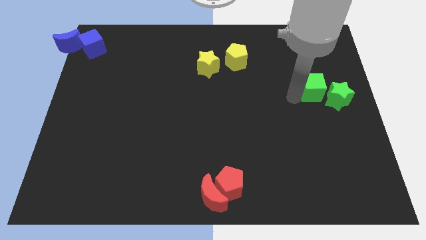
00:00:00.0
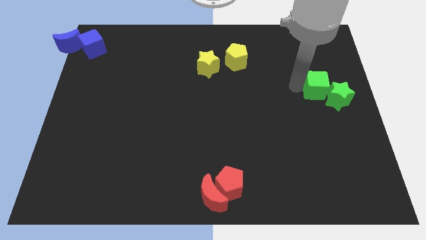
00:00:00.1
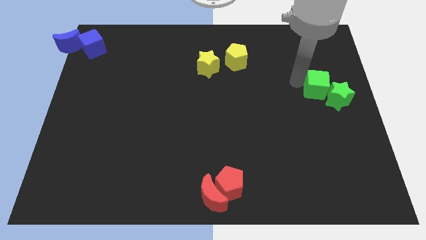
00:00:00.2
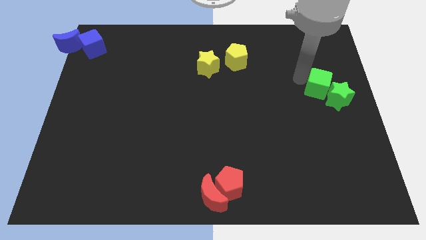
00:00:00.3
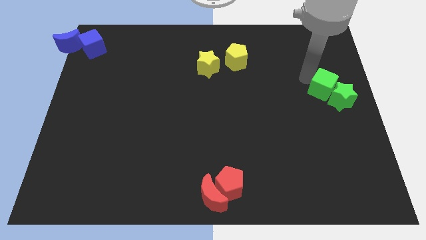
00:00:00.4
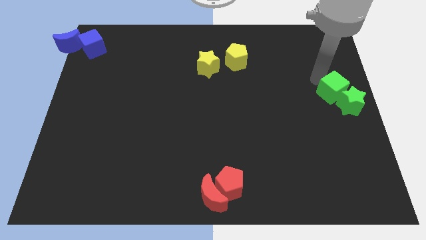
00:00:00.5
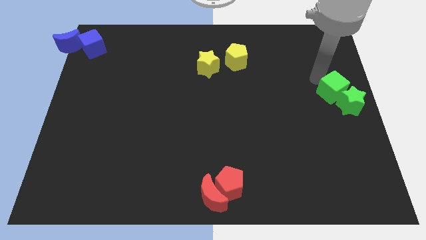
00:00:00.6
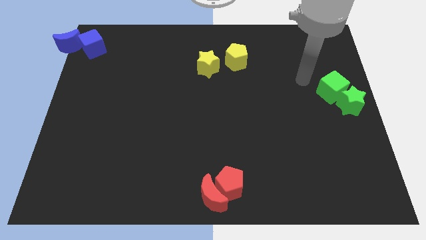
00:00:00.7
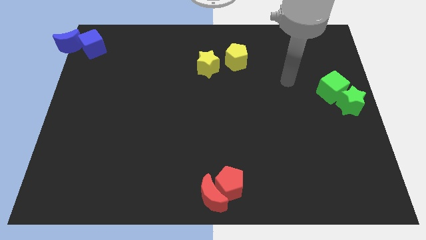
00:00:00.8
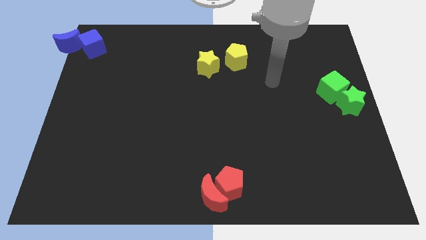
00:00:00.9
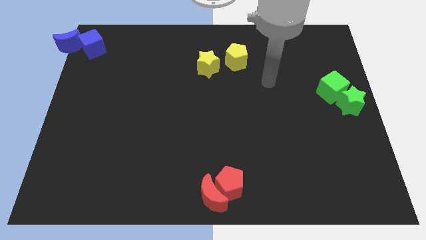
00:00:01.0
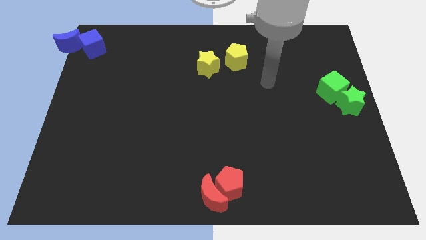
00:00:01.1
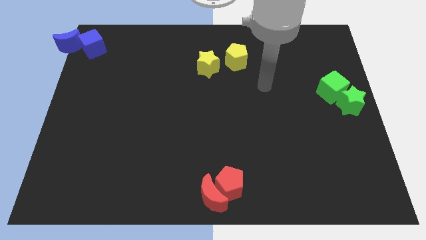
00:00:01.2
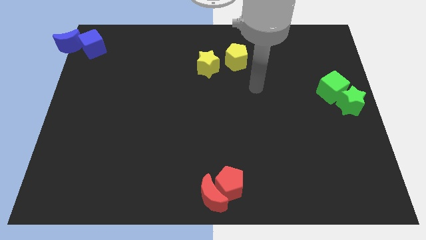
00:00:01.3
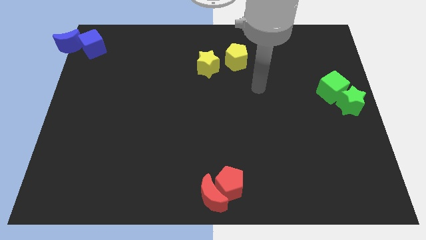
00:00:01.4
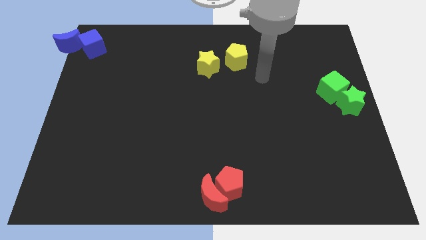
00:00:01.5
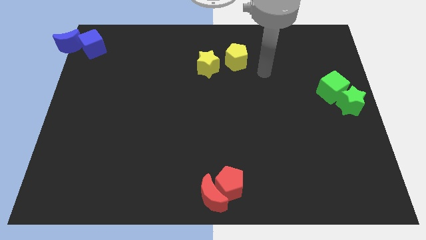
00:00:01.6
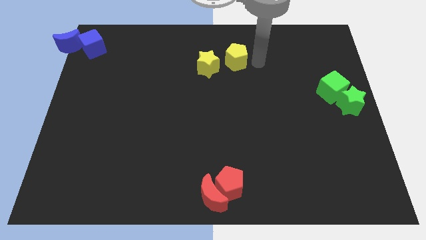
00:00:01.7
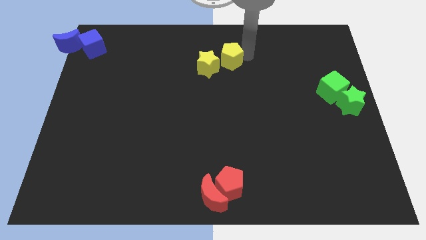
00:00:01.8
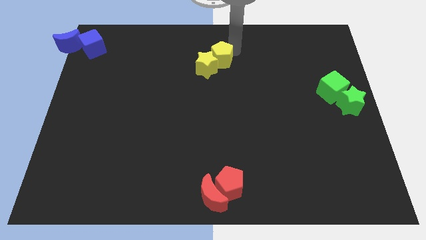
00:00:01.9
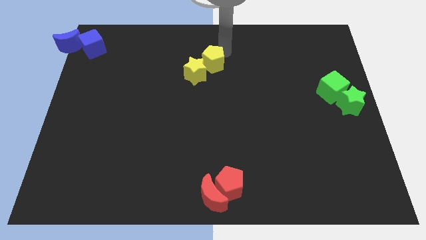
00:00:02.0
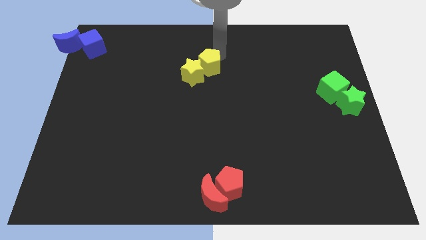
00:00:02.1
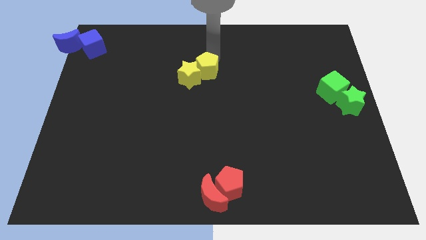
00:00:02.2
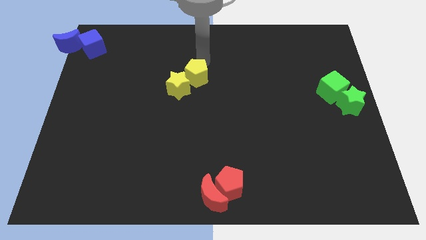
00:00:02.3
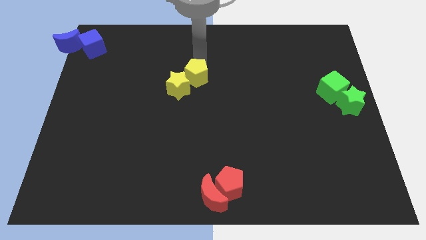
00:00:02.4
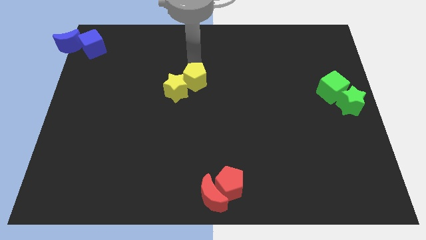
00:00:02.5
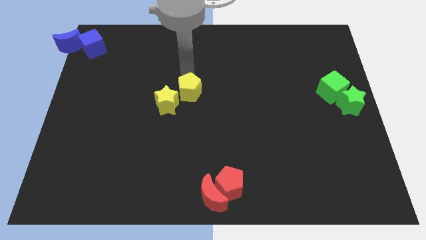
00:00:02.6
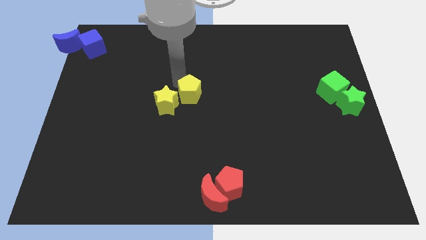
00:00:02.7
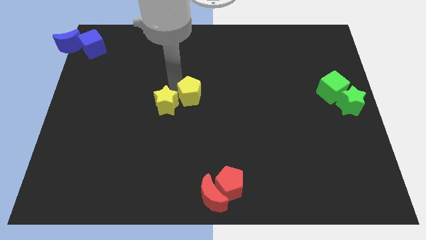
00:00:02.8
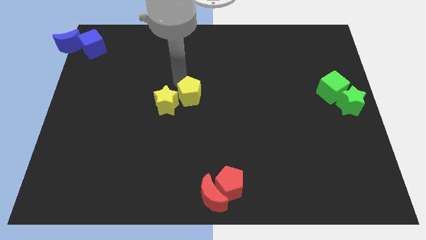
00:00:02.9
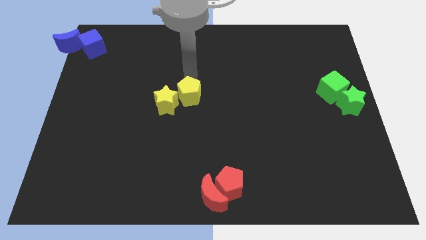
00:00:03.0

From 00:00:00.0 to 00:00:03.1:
push the group of yellow blocks downwards

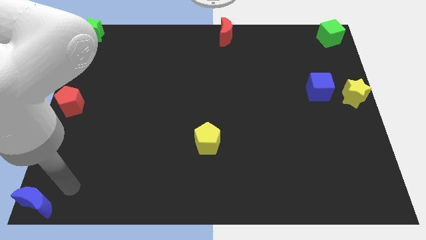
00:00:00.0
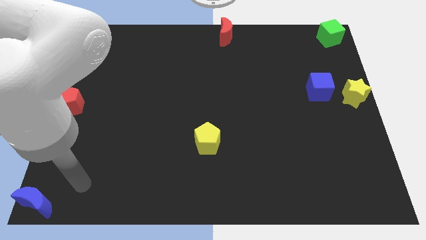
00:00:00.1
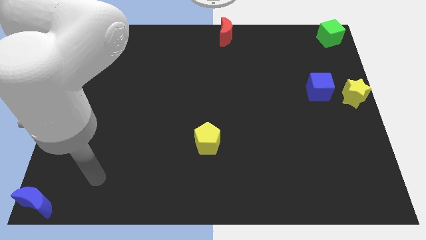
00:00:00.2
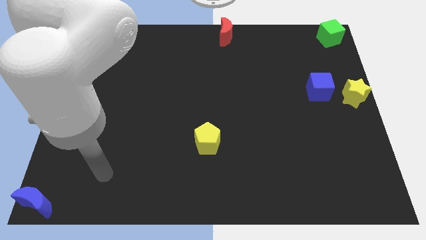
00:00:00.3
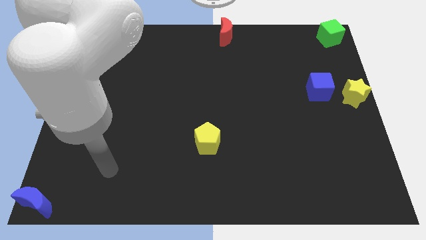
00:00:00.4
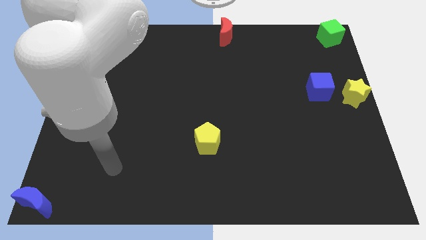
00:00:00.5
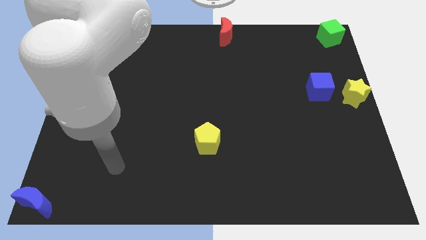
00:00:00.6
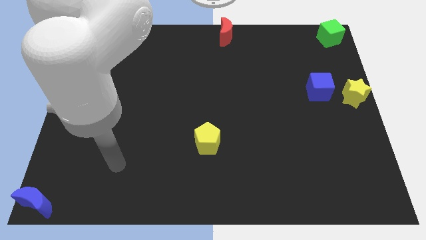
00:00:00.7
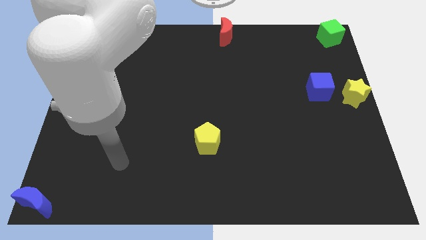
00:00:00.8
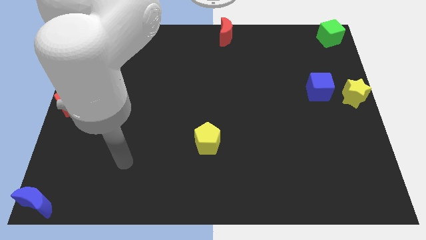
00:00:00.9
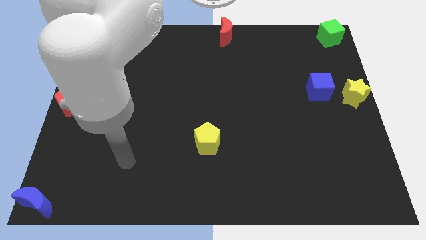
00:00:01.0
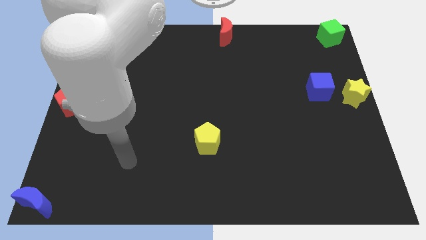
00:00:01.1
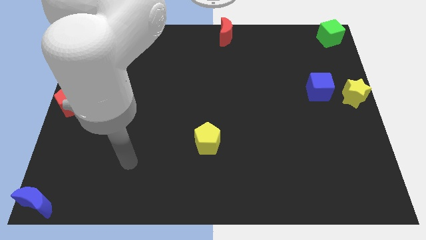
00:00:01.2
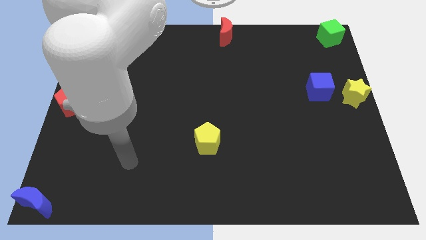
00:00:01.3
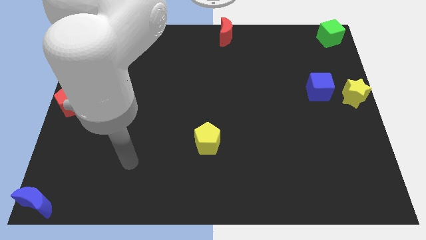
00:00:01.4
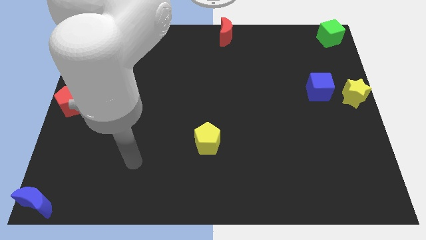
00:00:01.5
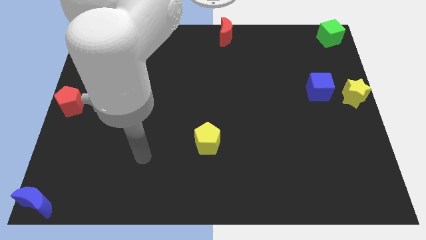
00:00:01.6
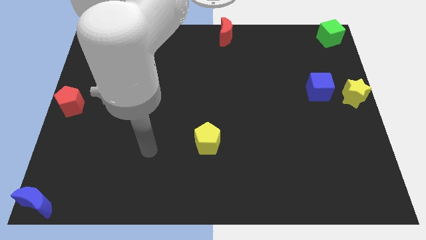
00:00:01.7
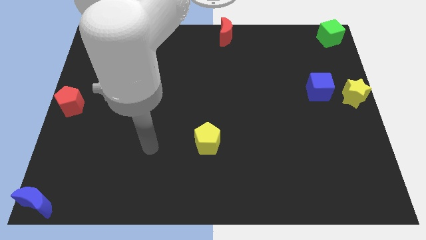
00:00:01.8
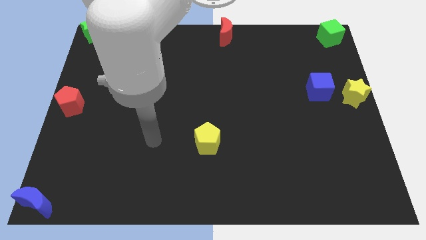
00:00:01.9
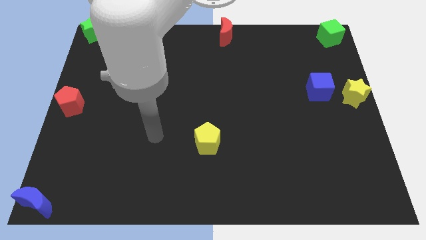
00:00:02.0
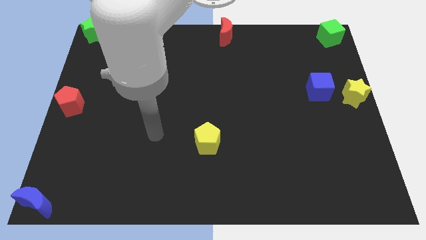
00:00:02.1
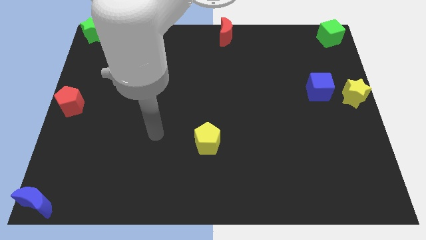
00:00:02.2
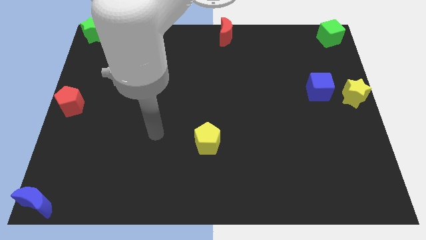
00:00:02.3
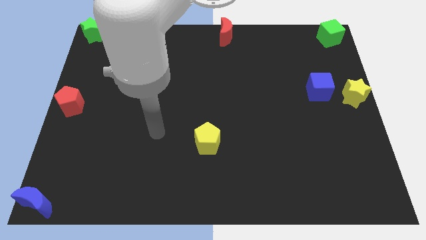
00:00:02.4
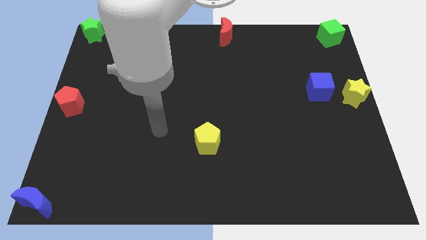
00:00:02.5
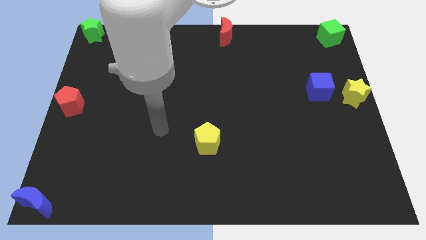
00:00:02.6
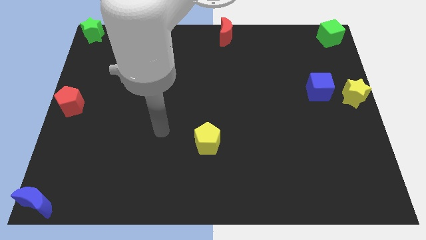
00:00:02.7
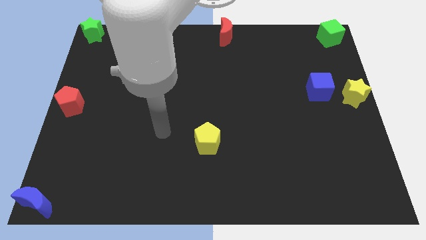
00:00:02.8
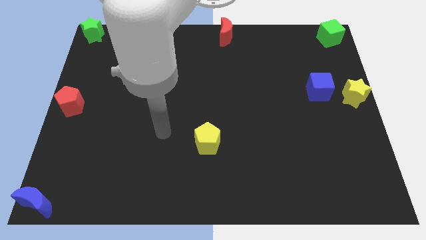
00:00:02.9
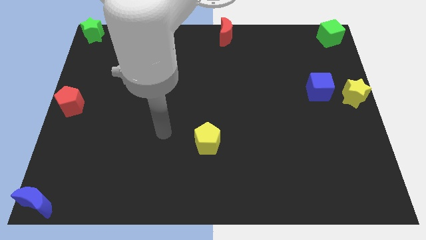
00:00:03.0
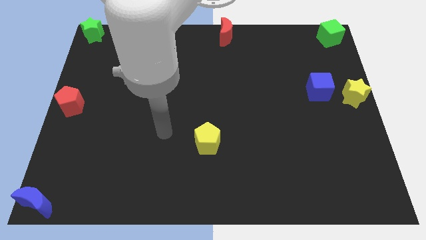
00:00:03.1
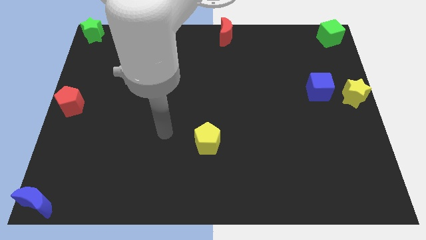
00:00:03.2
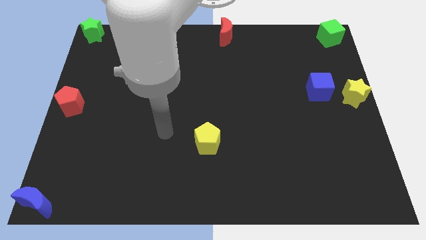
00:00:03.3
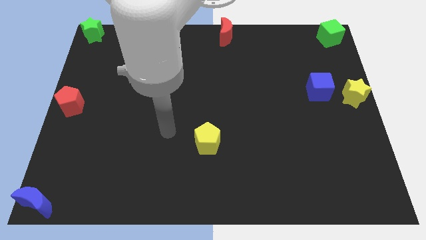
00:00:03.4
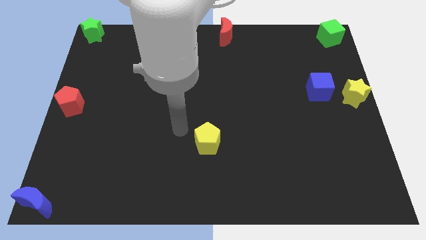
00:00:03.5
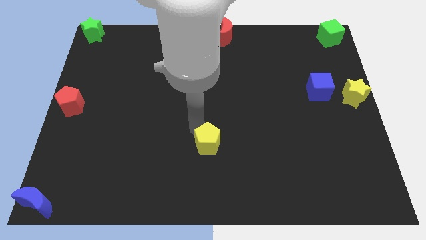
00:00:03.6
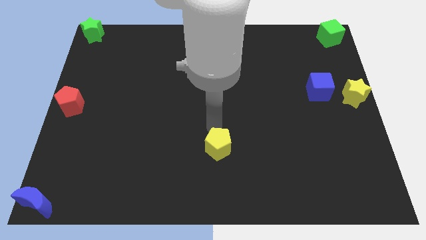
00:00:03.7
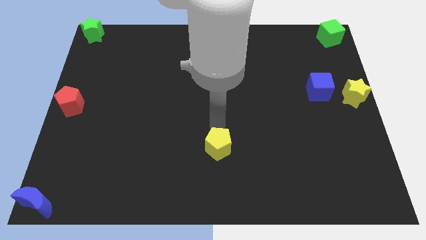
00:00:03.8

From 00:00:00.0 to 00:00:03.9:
move your arm to the top of the yellow pentagon

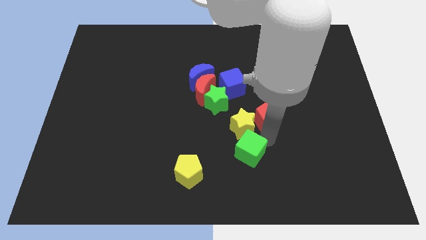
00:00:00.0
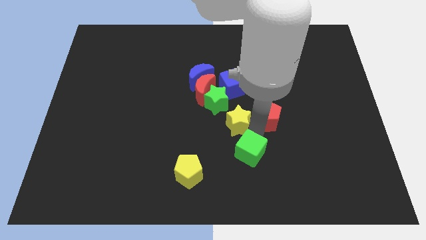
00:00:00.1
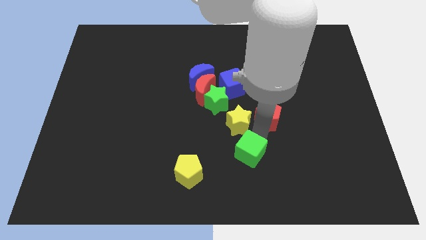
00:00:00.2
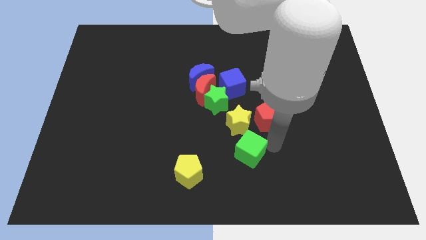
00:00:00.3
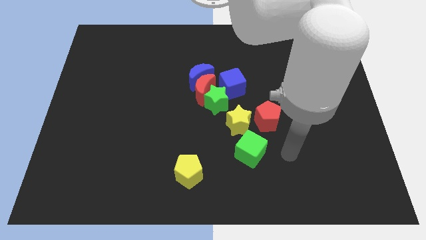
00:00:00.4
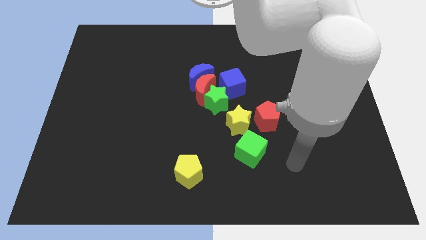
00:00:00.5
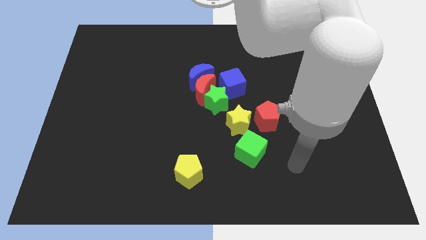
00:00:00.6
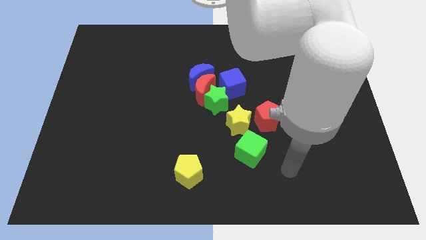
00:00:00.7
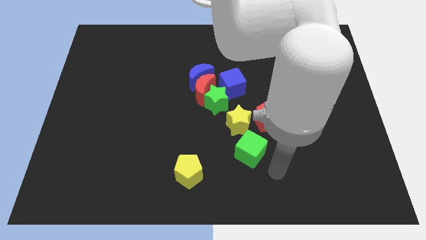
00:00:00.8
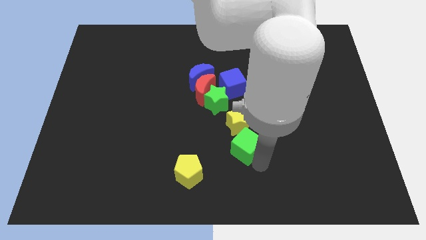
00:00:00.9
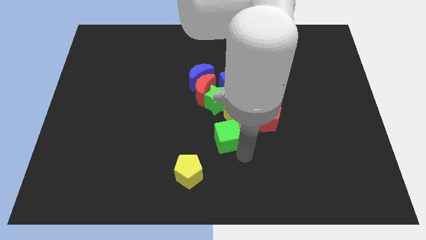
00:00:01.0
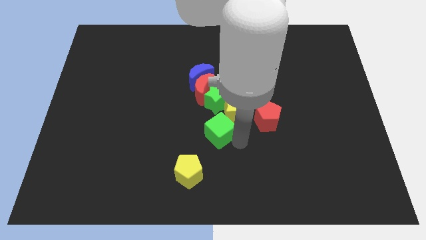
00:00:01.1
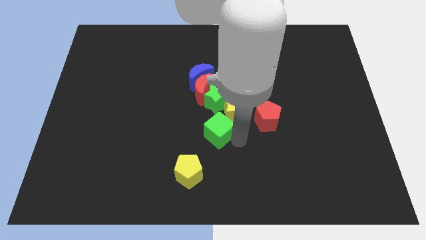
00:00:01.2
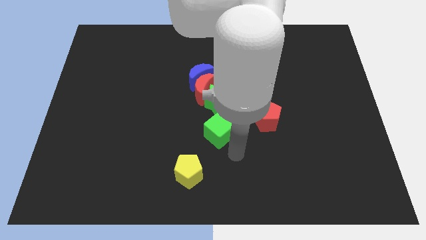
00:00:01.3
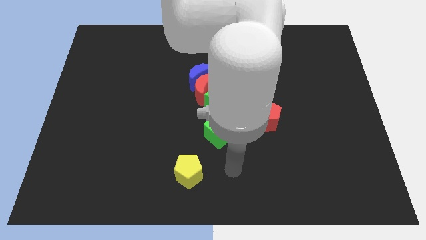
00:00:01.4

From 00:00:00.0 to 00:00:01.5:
push green cube into group of blocks

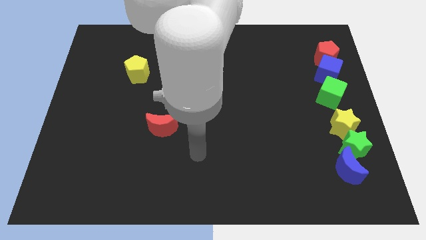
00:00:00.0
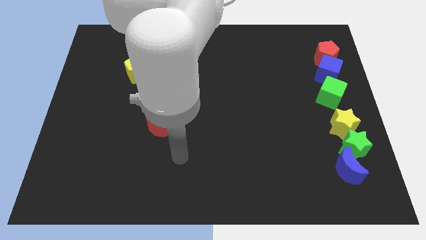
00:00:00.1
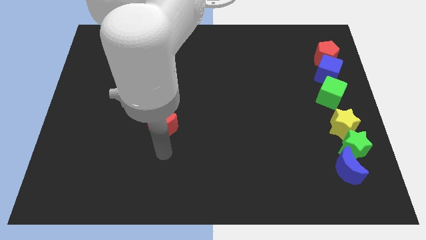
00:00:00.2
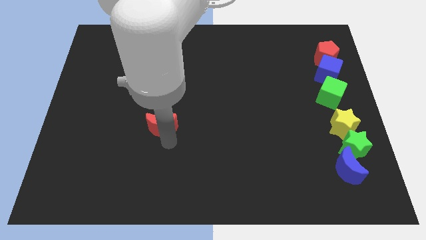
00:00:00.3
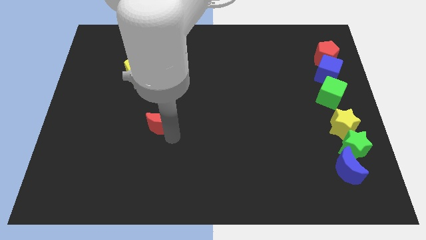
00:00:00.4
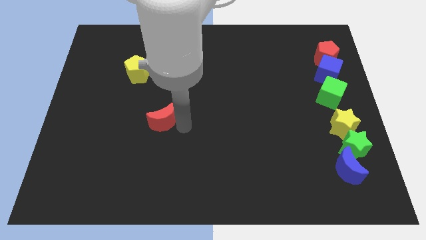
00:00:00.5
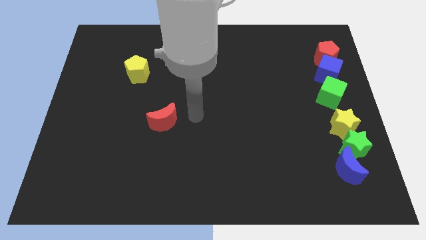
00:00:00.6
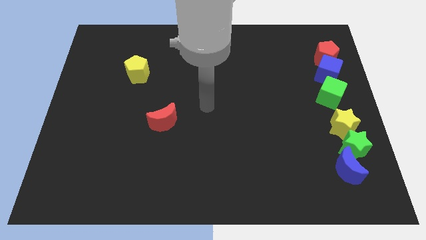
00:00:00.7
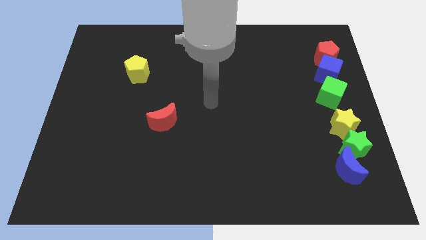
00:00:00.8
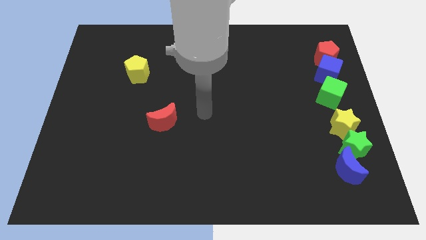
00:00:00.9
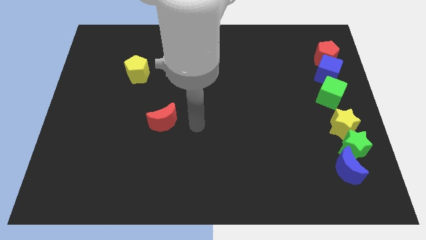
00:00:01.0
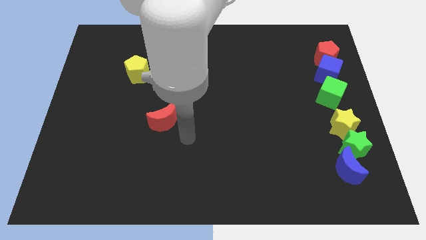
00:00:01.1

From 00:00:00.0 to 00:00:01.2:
move your arm at the right of the red moon
